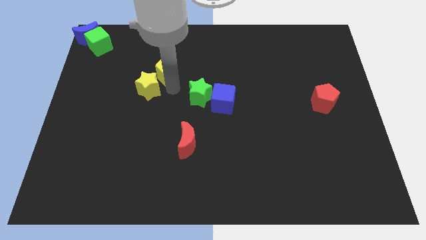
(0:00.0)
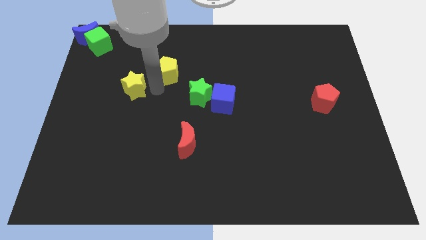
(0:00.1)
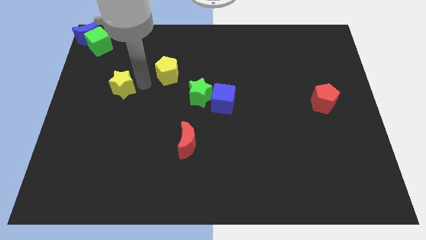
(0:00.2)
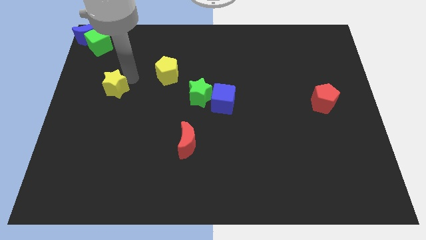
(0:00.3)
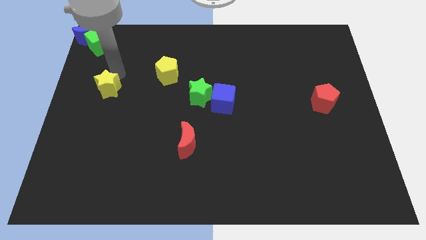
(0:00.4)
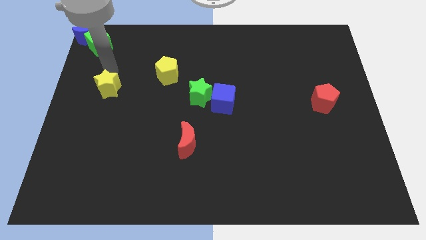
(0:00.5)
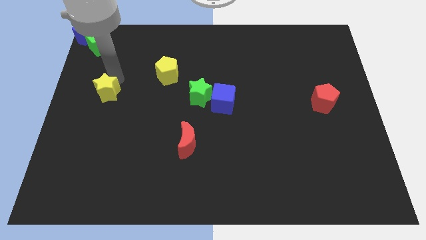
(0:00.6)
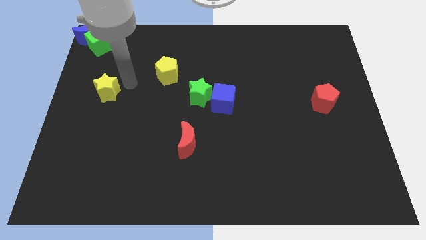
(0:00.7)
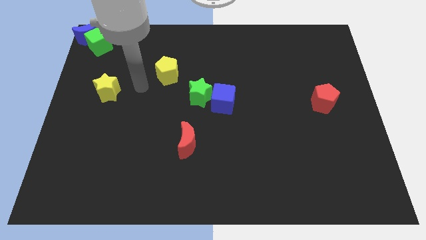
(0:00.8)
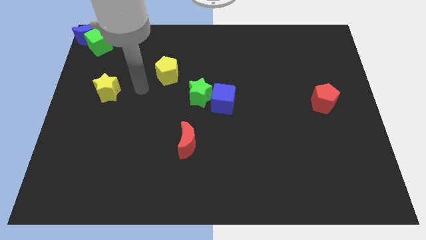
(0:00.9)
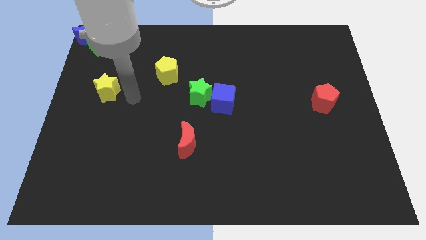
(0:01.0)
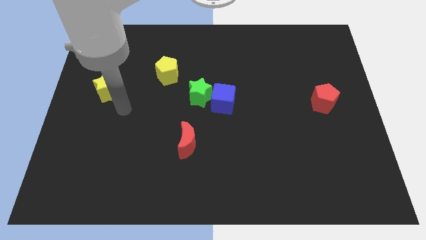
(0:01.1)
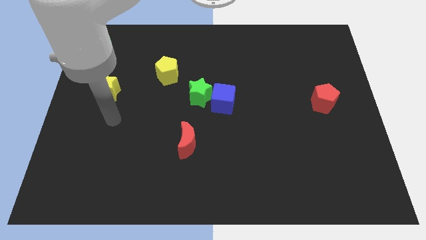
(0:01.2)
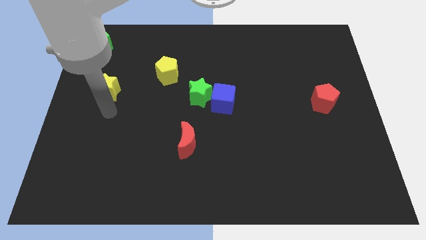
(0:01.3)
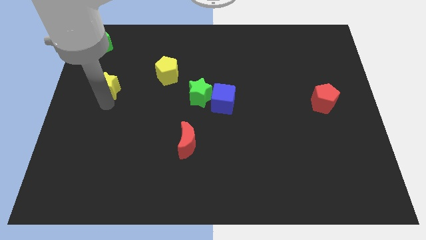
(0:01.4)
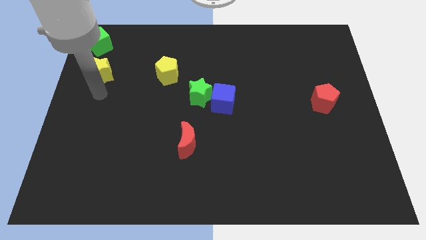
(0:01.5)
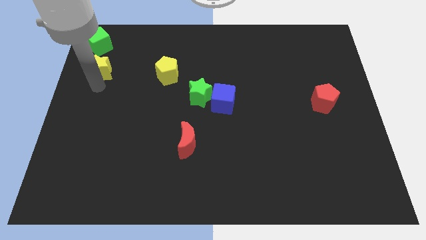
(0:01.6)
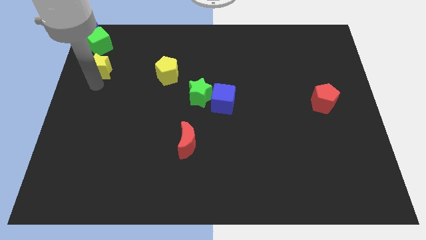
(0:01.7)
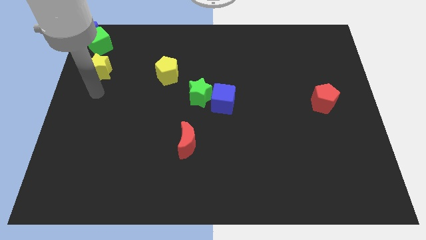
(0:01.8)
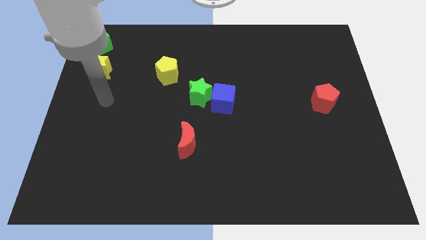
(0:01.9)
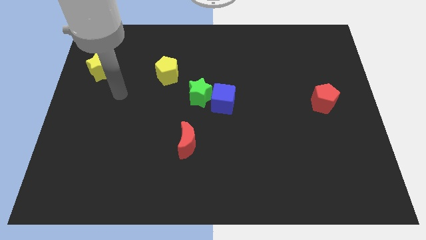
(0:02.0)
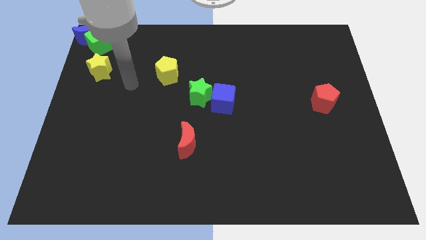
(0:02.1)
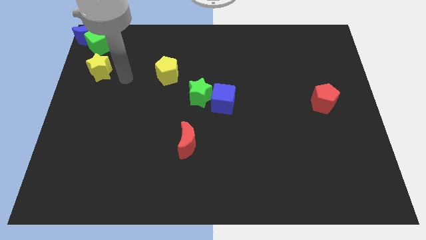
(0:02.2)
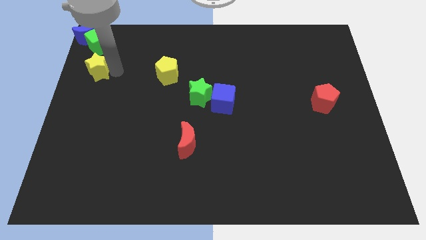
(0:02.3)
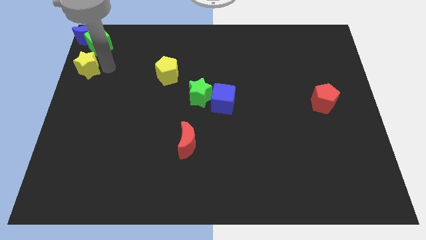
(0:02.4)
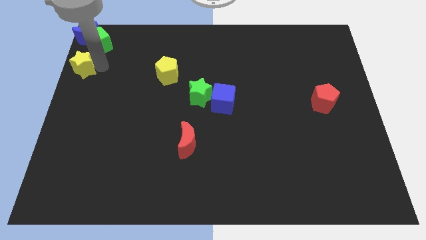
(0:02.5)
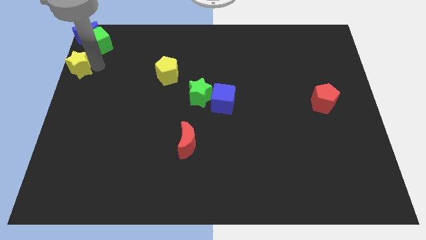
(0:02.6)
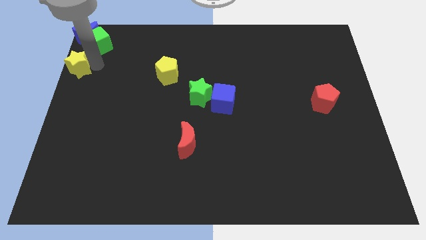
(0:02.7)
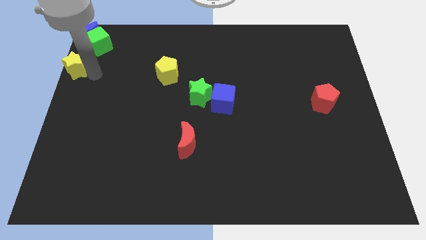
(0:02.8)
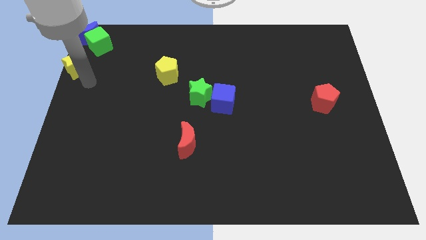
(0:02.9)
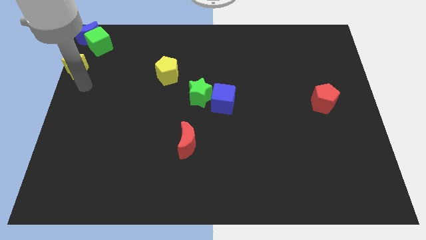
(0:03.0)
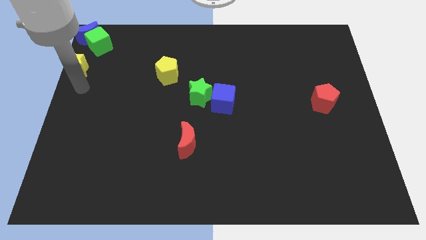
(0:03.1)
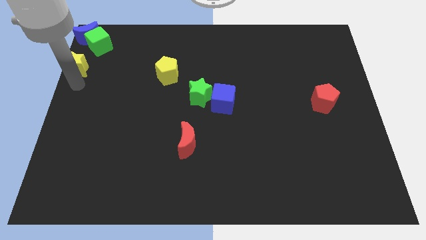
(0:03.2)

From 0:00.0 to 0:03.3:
move the yellow star parallel bottom to the blue crescent

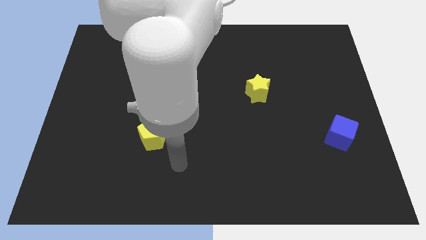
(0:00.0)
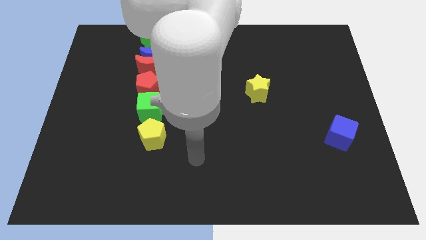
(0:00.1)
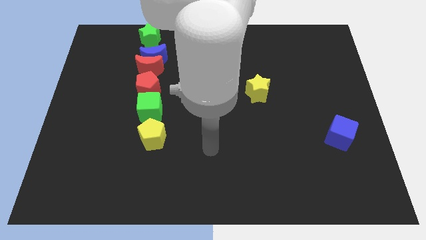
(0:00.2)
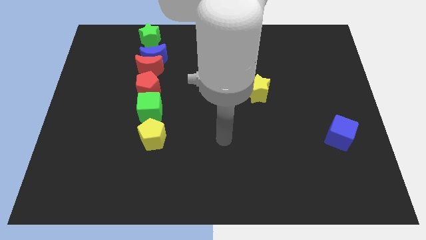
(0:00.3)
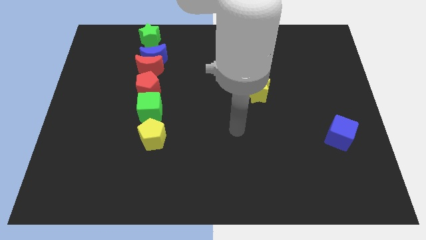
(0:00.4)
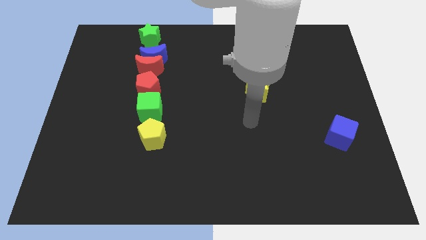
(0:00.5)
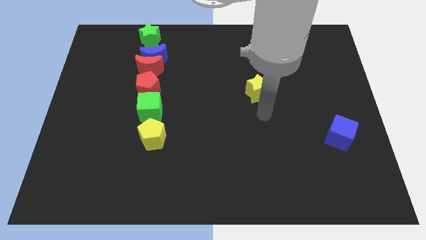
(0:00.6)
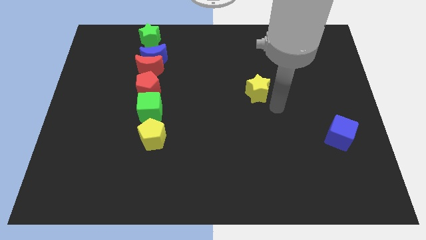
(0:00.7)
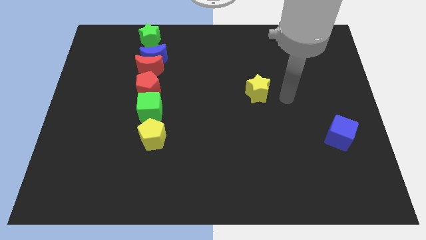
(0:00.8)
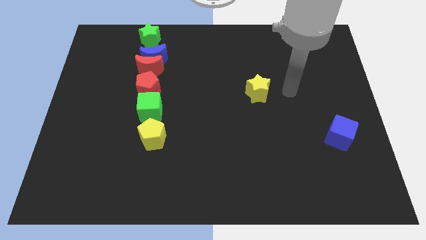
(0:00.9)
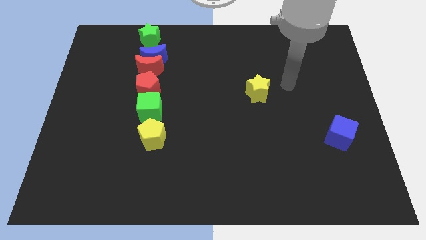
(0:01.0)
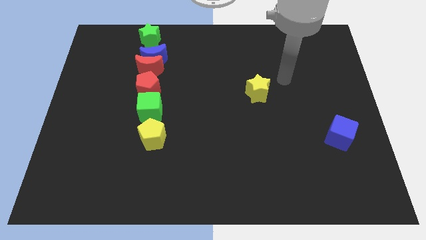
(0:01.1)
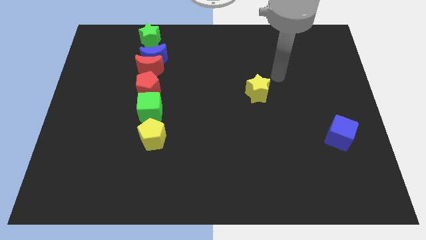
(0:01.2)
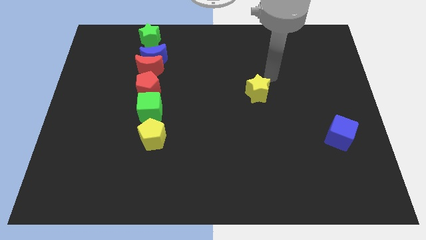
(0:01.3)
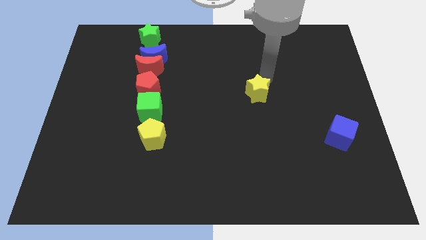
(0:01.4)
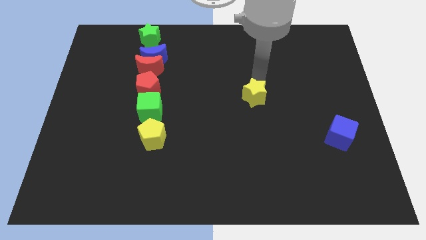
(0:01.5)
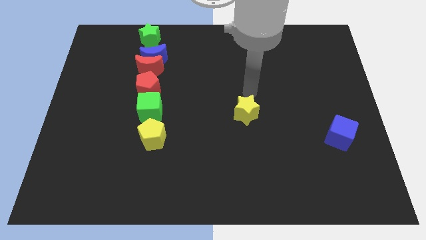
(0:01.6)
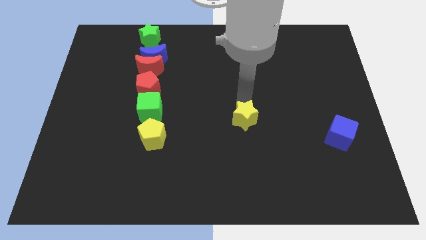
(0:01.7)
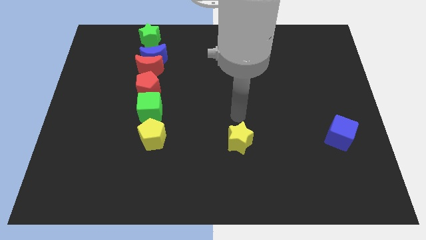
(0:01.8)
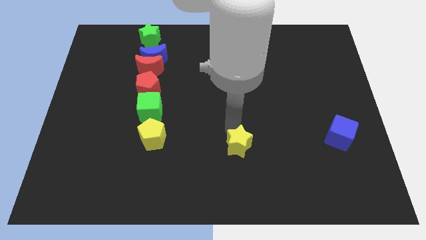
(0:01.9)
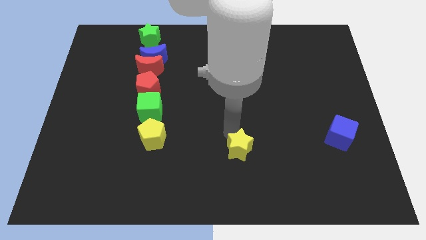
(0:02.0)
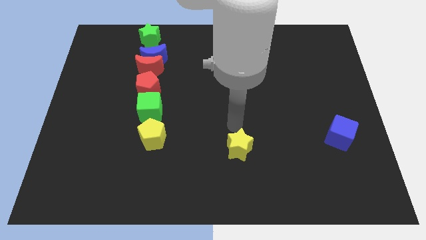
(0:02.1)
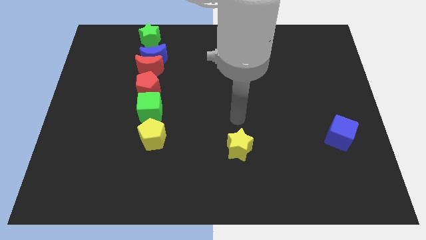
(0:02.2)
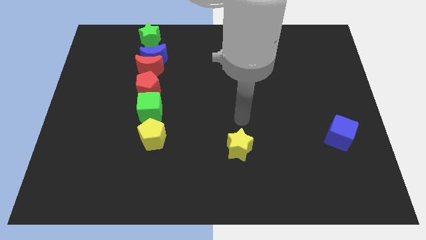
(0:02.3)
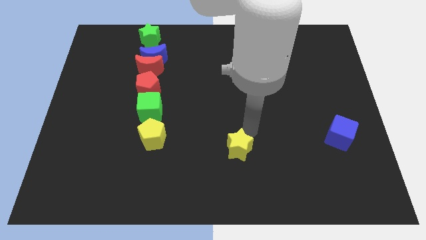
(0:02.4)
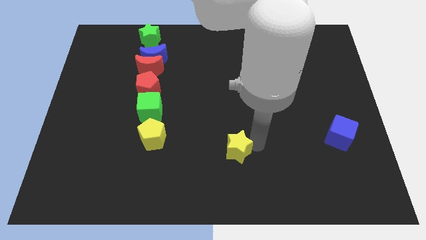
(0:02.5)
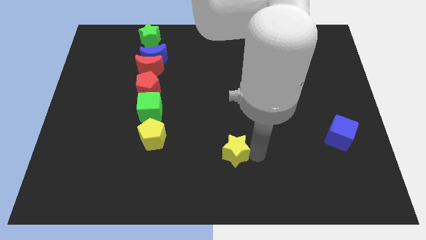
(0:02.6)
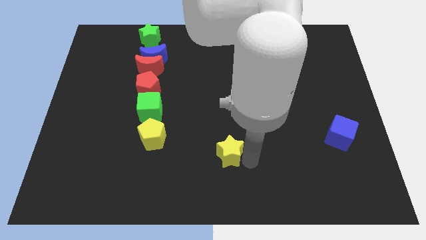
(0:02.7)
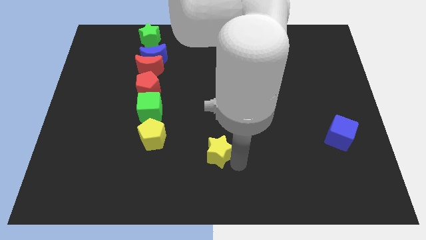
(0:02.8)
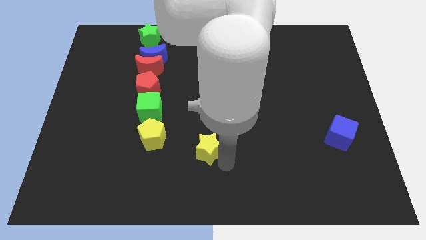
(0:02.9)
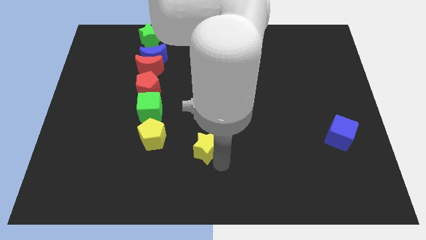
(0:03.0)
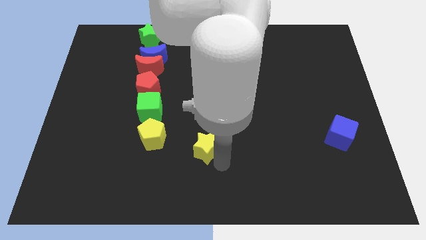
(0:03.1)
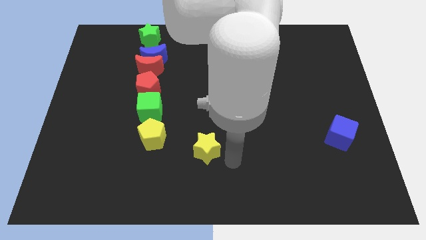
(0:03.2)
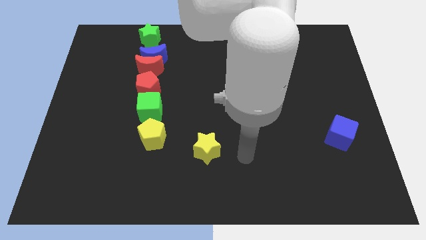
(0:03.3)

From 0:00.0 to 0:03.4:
move the yellow star towards the yellow pentagon

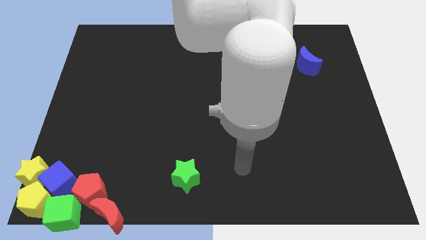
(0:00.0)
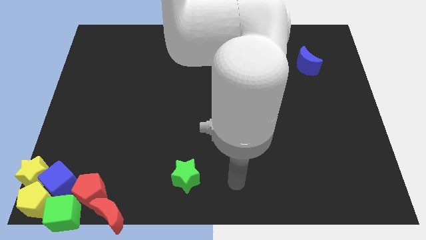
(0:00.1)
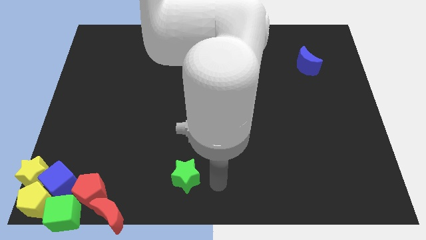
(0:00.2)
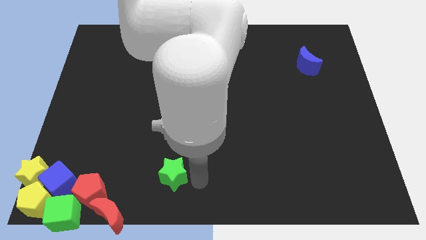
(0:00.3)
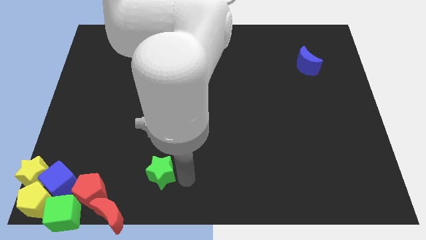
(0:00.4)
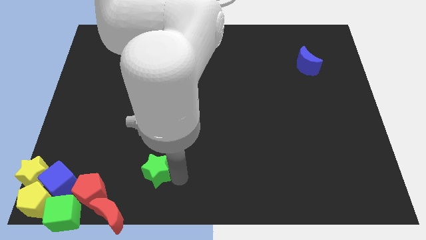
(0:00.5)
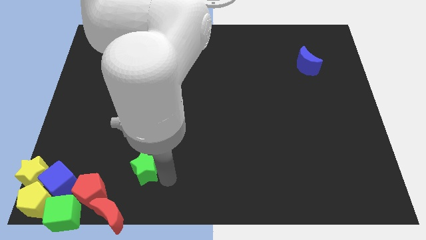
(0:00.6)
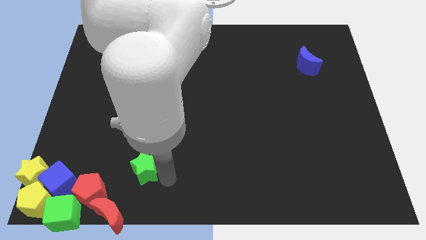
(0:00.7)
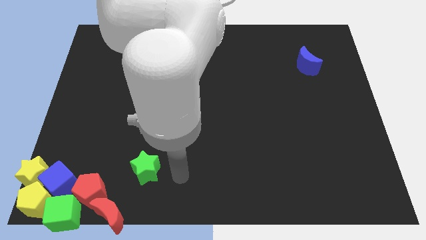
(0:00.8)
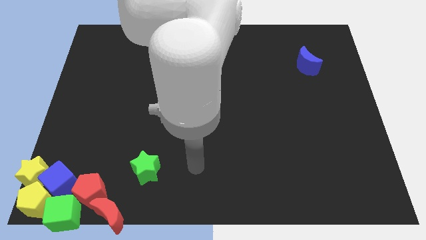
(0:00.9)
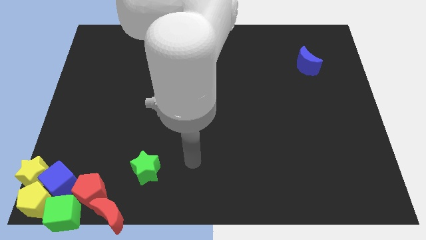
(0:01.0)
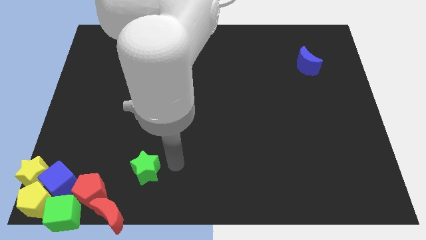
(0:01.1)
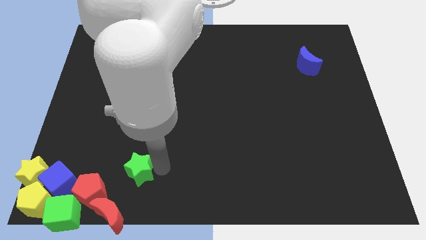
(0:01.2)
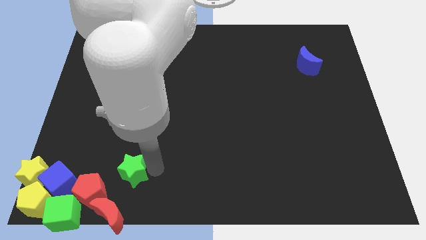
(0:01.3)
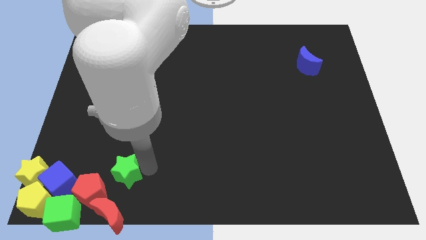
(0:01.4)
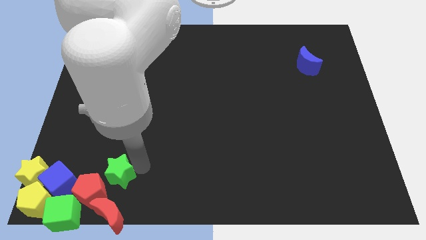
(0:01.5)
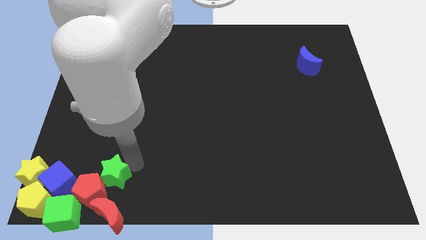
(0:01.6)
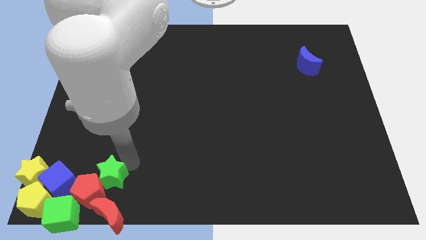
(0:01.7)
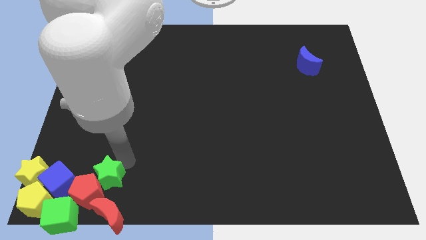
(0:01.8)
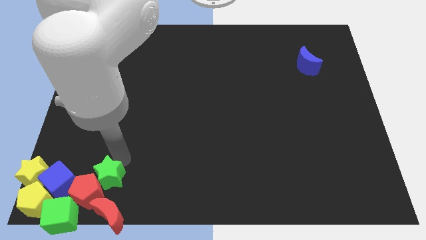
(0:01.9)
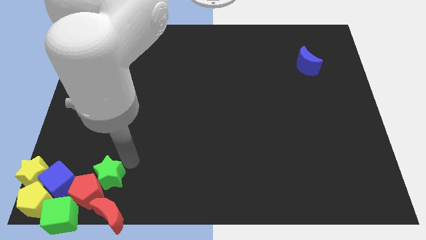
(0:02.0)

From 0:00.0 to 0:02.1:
push the green star right top of the red pentagon
